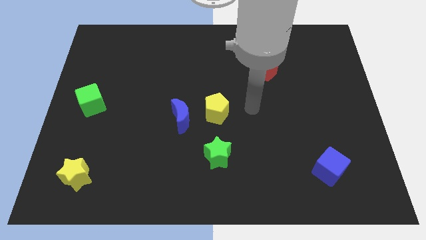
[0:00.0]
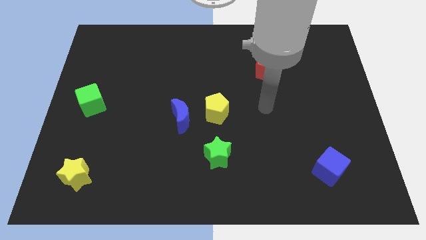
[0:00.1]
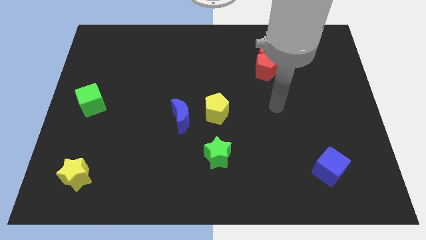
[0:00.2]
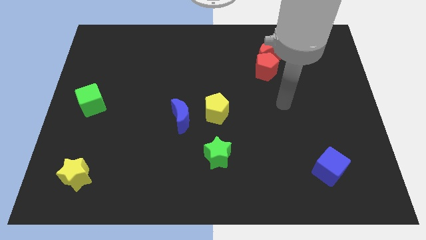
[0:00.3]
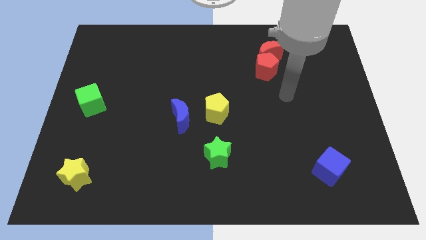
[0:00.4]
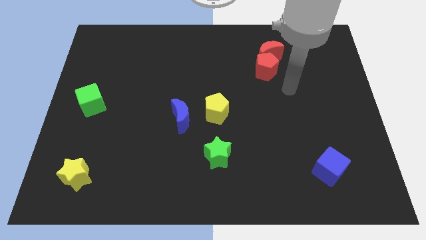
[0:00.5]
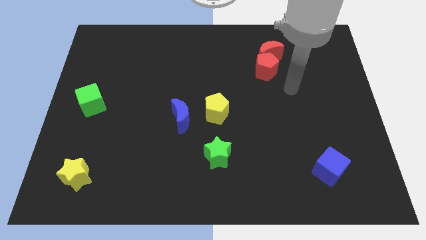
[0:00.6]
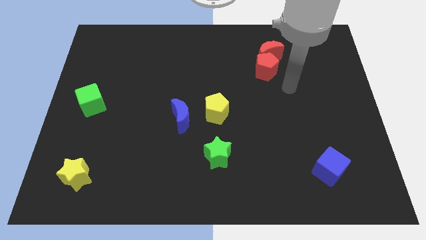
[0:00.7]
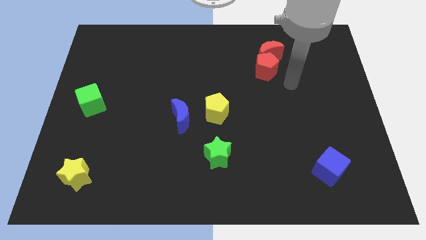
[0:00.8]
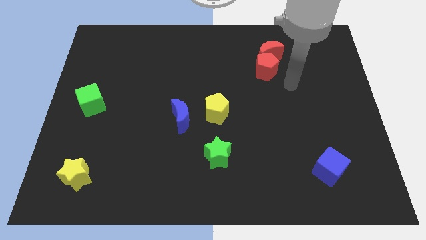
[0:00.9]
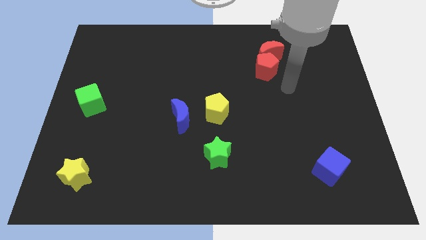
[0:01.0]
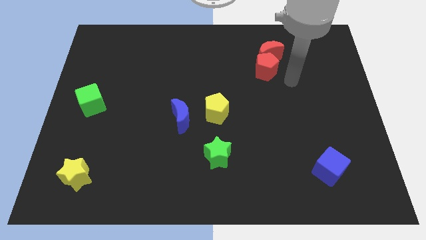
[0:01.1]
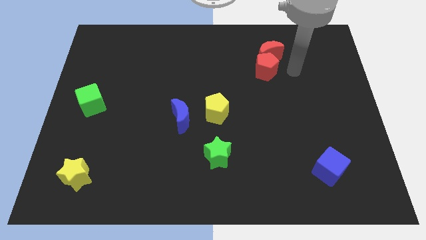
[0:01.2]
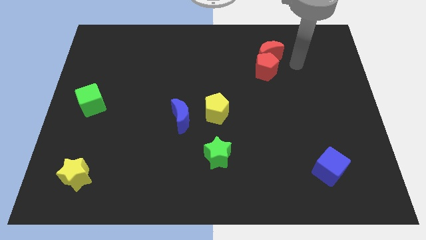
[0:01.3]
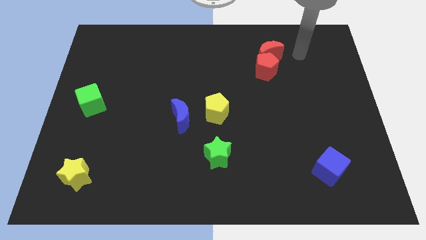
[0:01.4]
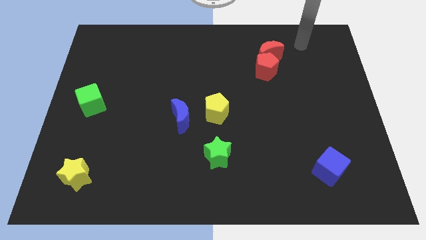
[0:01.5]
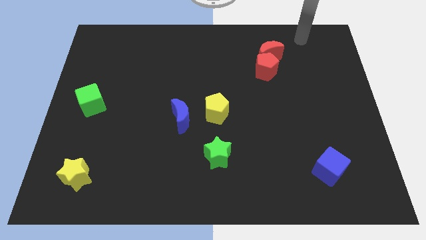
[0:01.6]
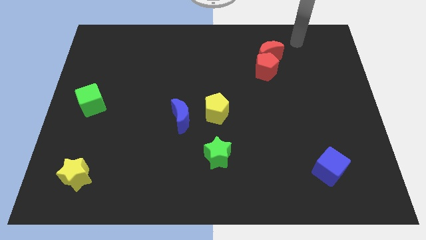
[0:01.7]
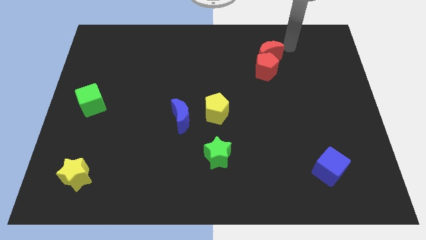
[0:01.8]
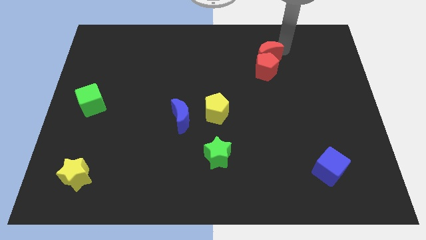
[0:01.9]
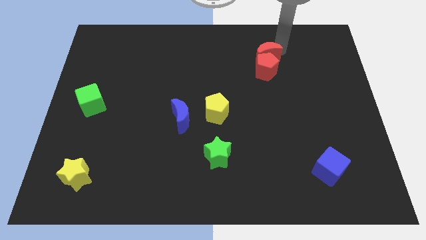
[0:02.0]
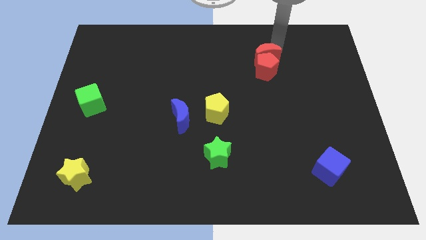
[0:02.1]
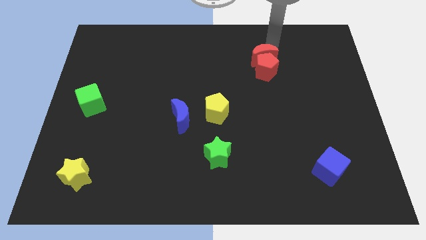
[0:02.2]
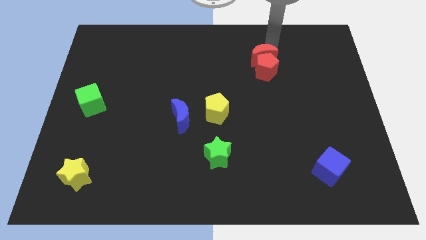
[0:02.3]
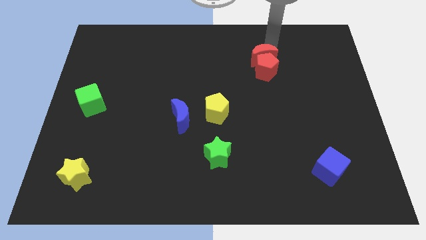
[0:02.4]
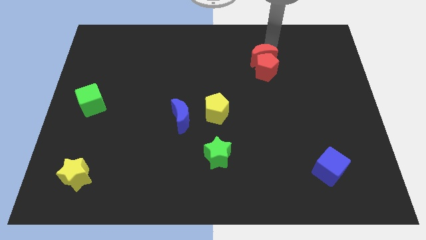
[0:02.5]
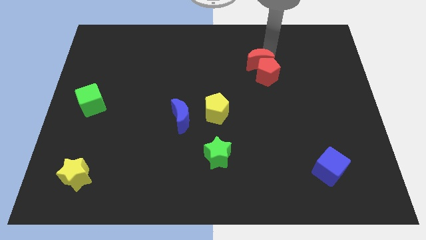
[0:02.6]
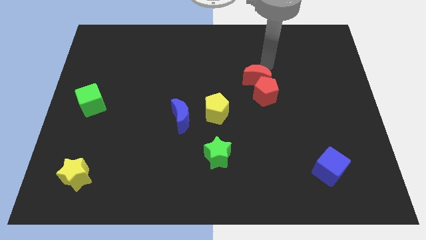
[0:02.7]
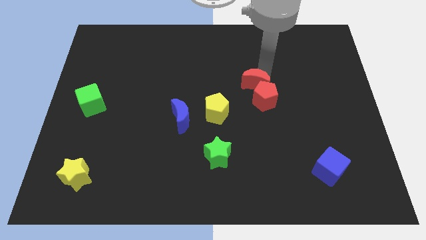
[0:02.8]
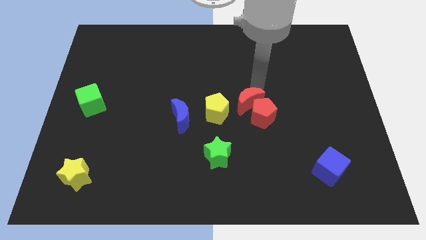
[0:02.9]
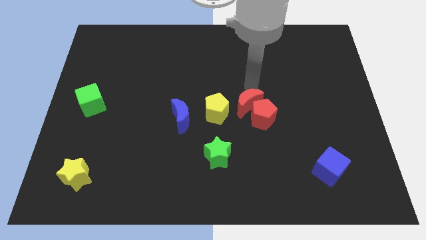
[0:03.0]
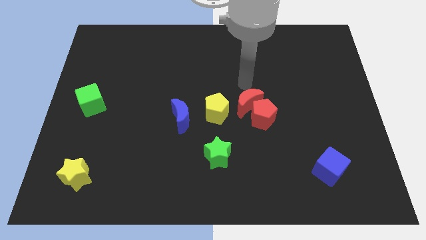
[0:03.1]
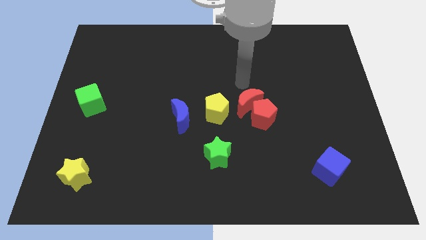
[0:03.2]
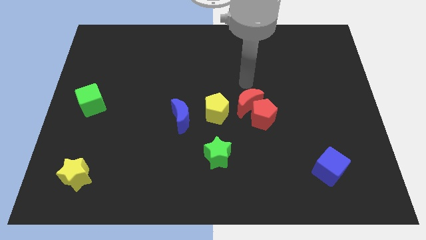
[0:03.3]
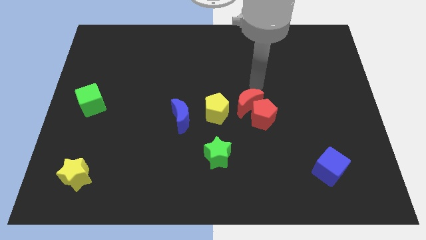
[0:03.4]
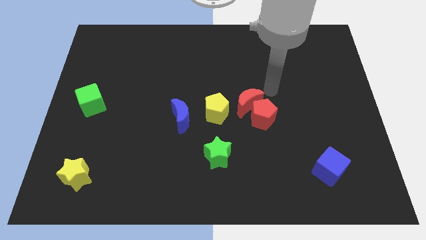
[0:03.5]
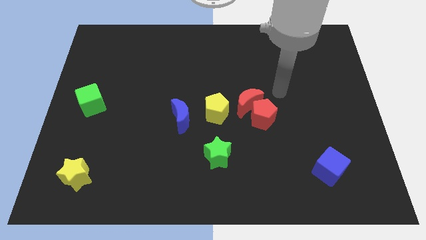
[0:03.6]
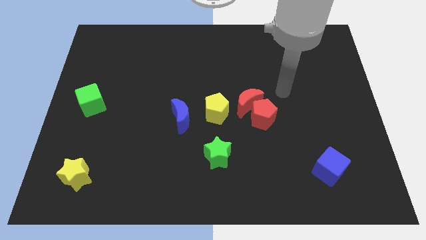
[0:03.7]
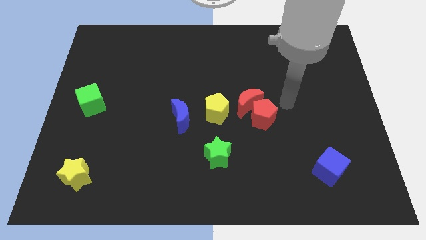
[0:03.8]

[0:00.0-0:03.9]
slide the red moon and red pentagon together to the bottom side of the board

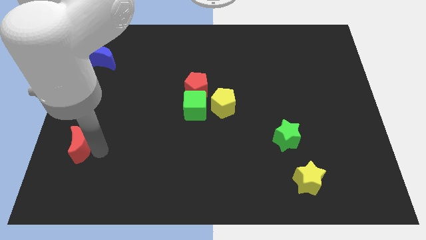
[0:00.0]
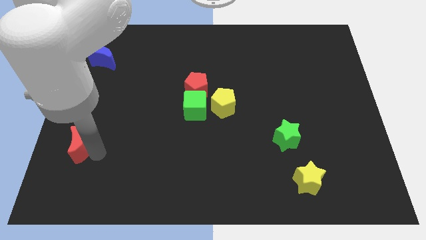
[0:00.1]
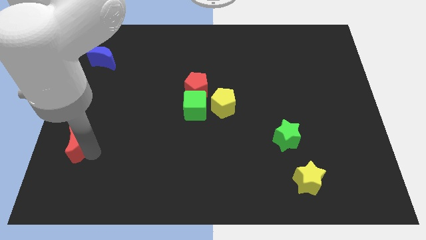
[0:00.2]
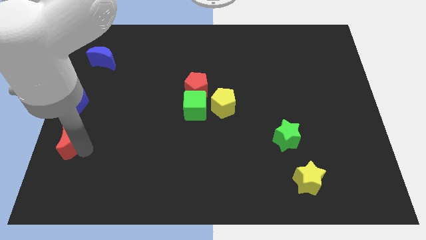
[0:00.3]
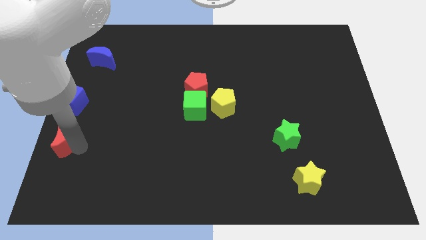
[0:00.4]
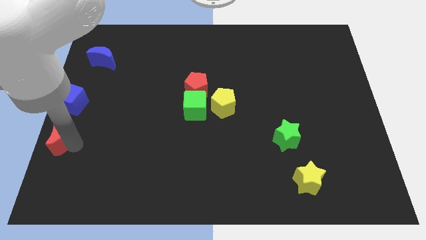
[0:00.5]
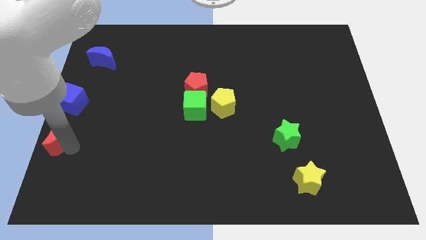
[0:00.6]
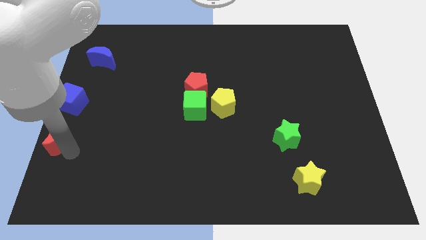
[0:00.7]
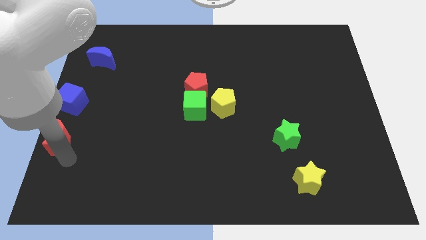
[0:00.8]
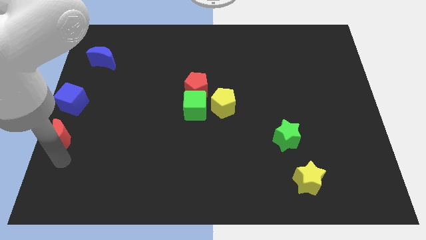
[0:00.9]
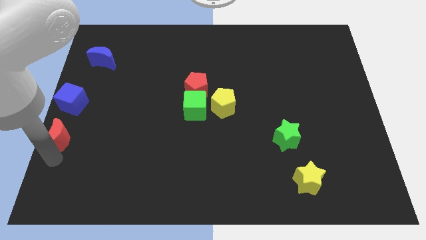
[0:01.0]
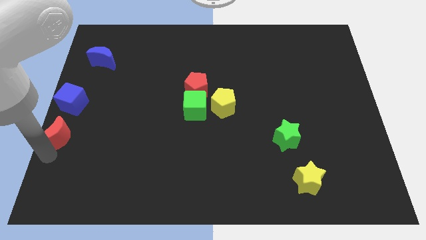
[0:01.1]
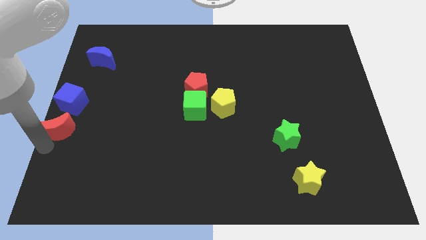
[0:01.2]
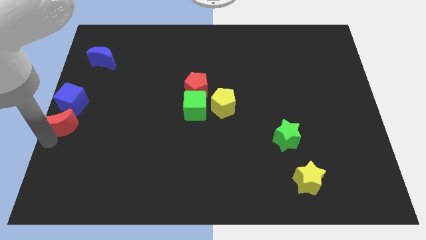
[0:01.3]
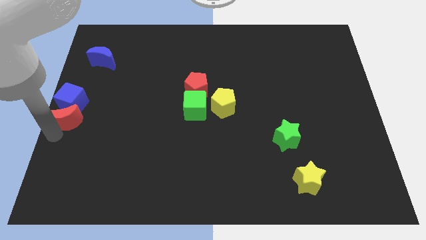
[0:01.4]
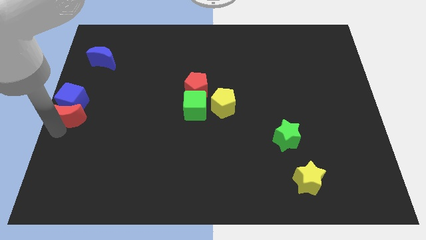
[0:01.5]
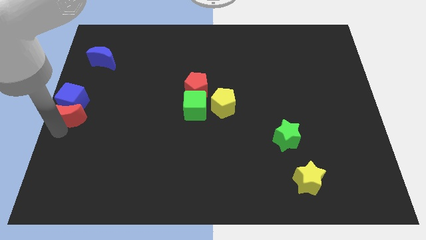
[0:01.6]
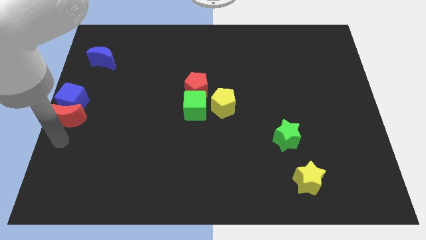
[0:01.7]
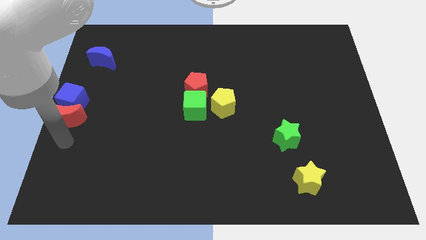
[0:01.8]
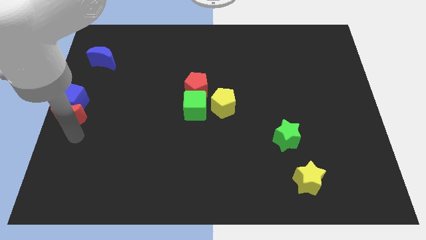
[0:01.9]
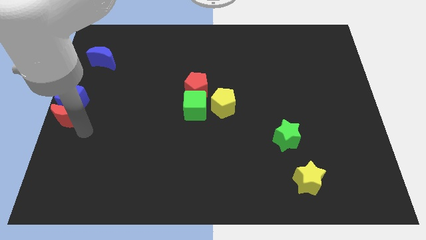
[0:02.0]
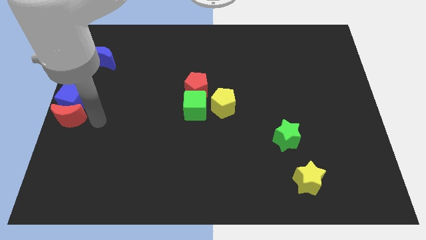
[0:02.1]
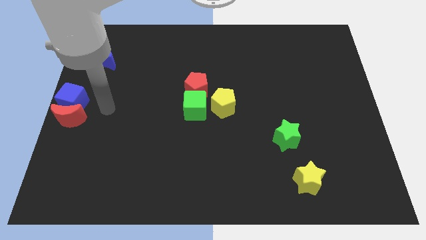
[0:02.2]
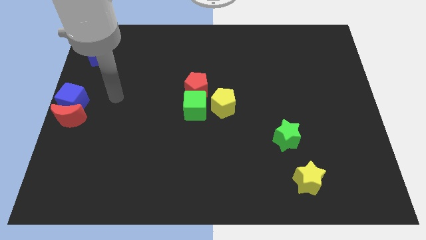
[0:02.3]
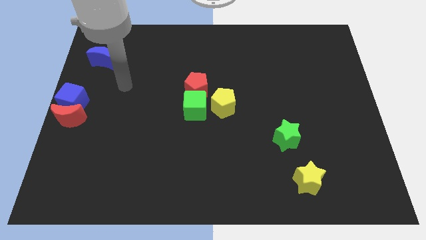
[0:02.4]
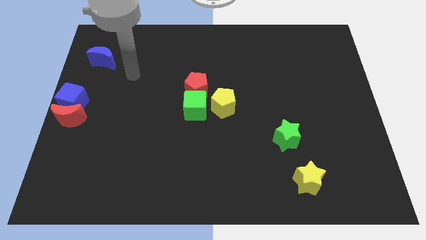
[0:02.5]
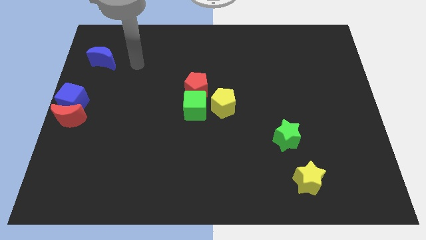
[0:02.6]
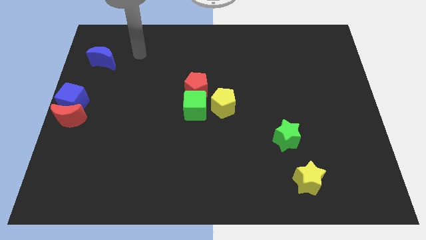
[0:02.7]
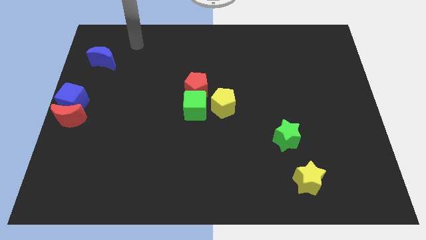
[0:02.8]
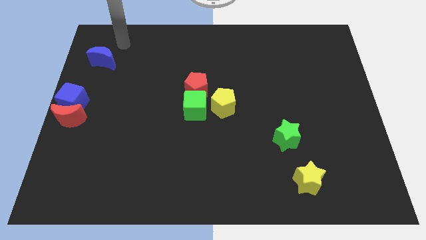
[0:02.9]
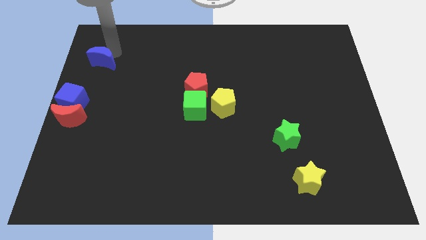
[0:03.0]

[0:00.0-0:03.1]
slide the red crescent into the blue cube

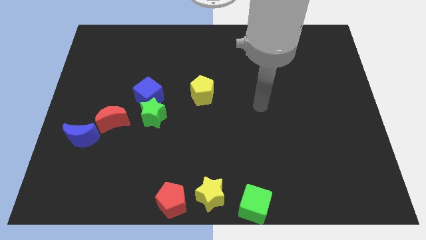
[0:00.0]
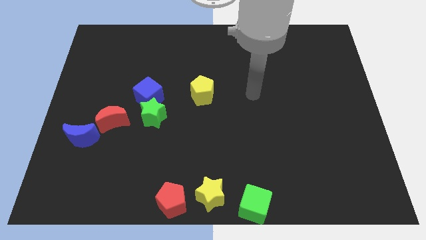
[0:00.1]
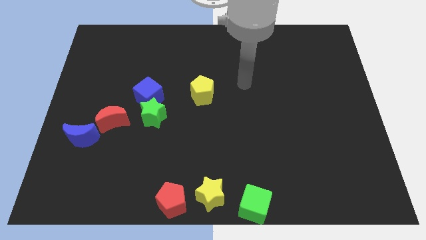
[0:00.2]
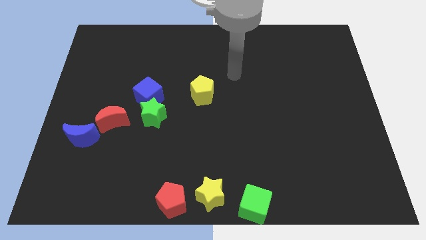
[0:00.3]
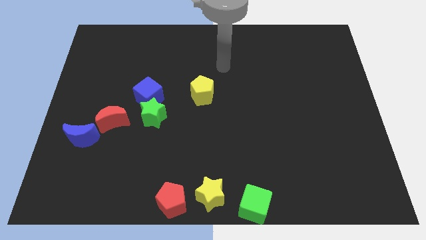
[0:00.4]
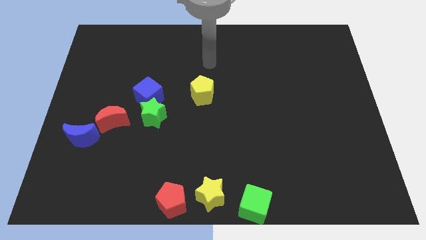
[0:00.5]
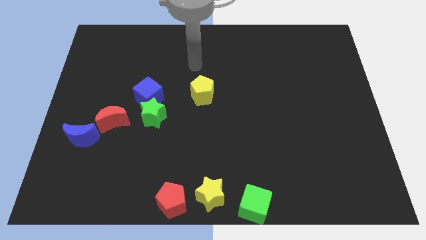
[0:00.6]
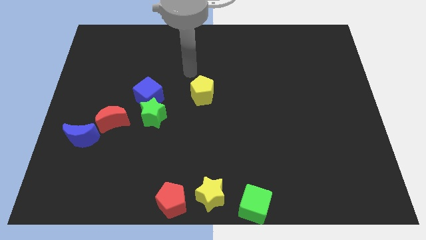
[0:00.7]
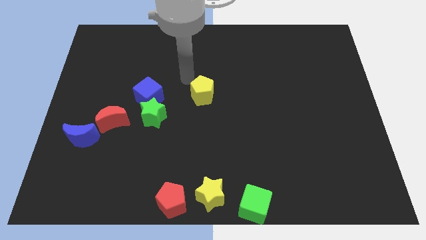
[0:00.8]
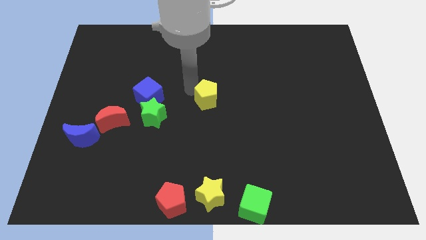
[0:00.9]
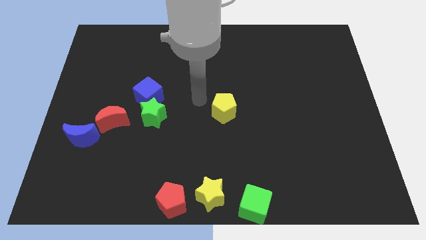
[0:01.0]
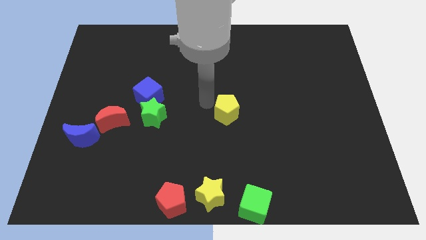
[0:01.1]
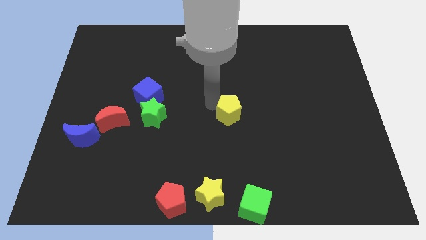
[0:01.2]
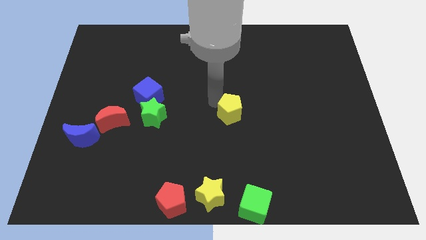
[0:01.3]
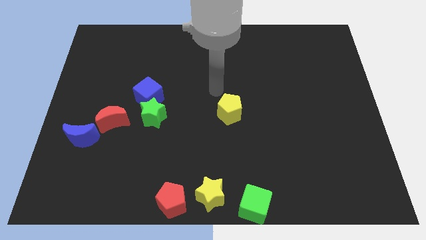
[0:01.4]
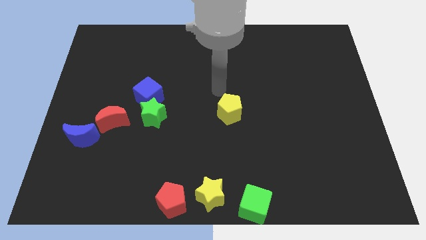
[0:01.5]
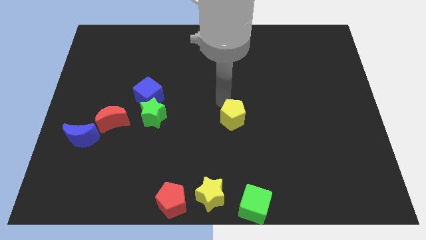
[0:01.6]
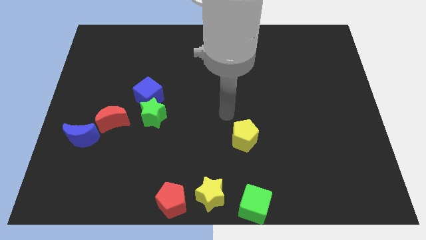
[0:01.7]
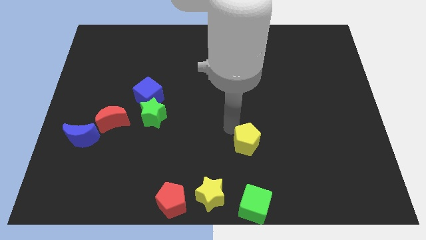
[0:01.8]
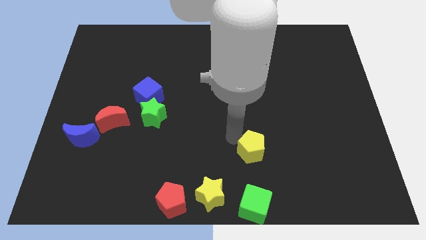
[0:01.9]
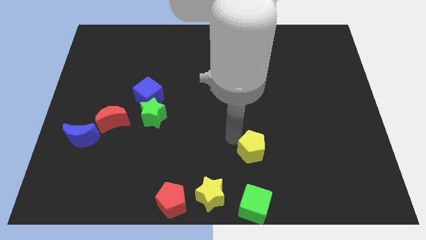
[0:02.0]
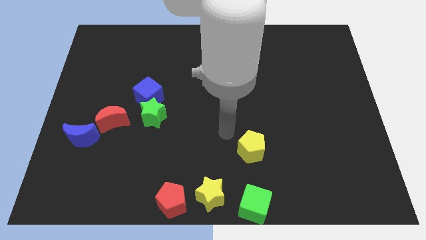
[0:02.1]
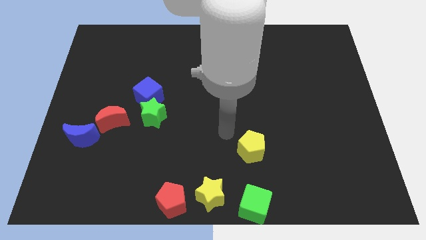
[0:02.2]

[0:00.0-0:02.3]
push the yellow pentagon towards green cube
